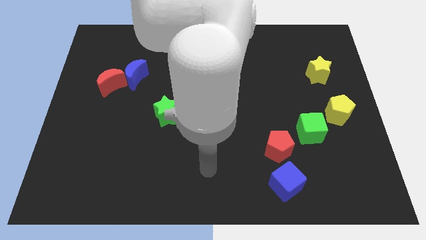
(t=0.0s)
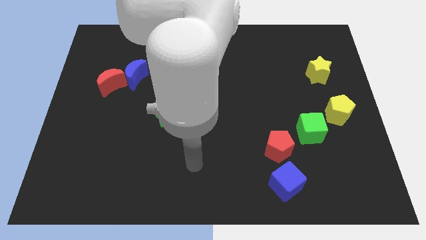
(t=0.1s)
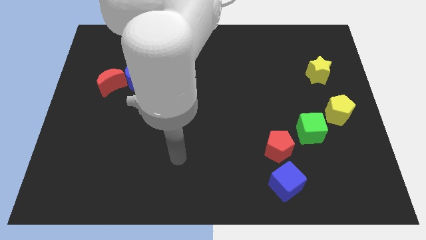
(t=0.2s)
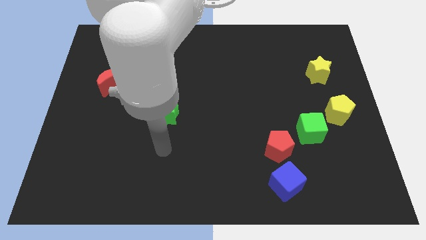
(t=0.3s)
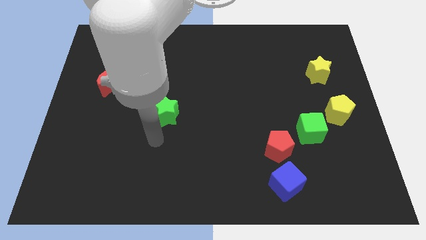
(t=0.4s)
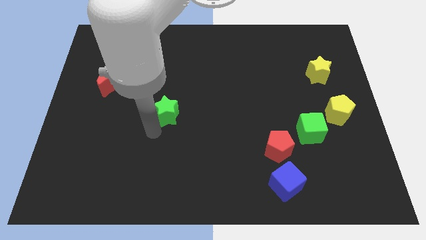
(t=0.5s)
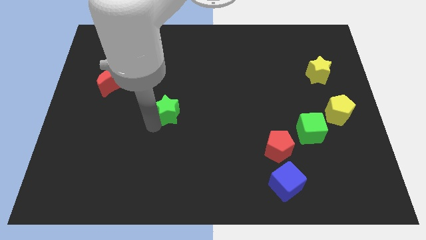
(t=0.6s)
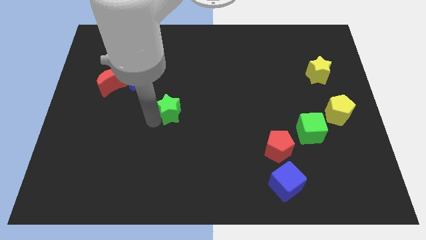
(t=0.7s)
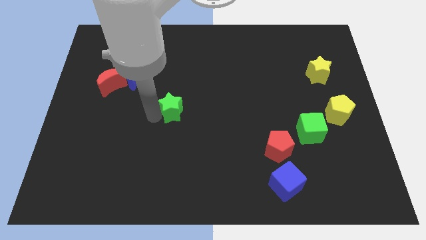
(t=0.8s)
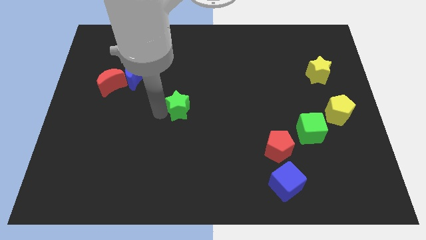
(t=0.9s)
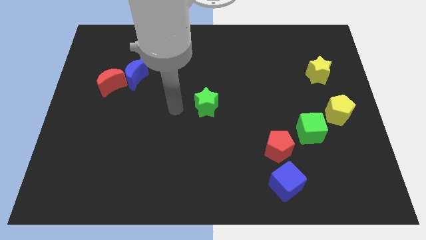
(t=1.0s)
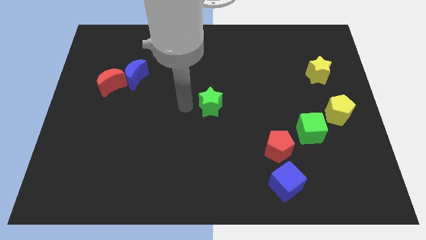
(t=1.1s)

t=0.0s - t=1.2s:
push green star slightly towards right side

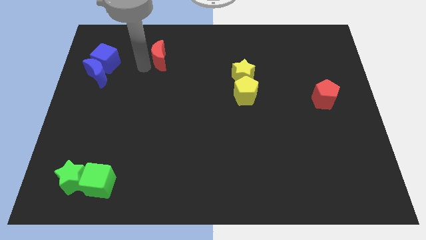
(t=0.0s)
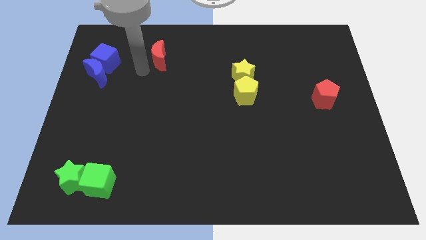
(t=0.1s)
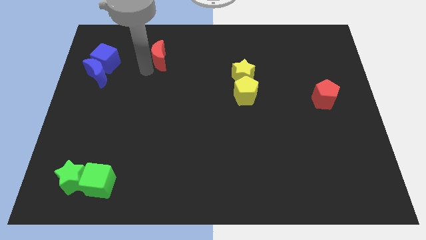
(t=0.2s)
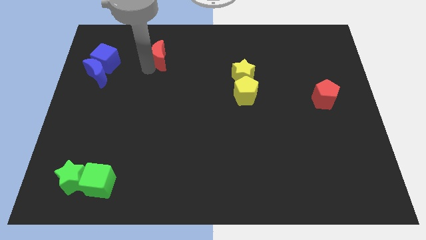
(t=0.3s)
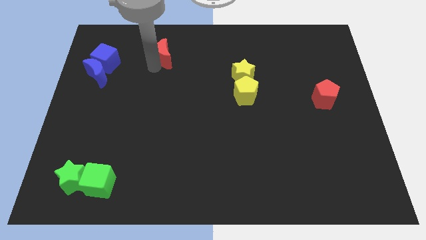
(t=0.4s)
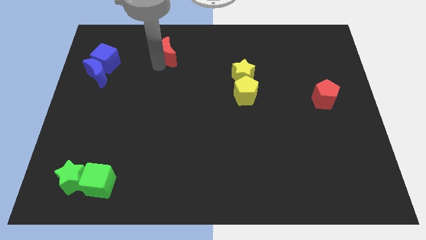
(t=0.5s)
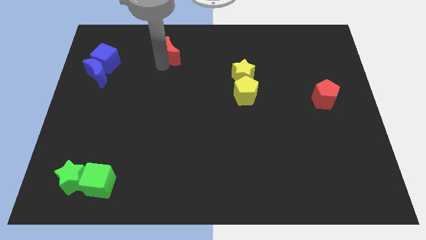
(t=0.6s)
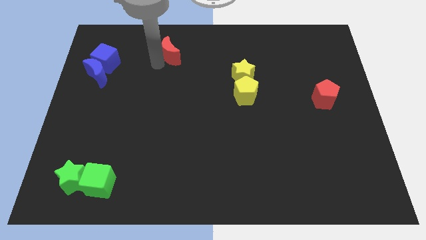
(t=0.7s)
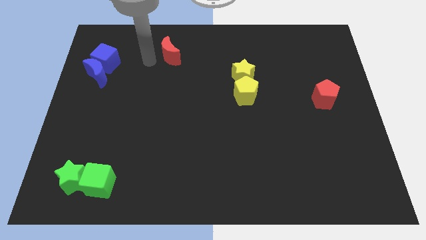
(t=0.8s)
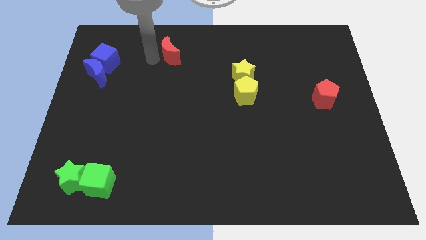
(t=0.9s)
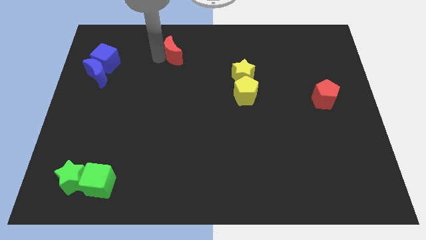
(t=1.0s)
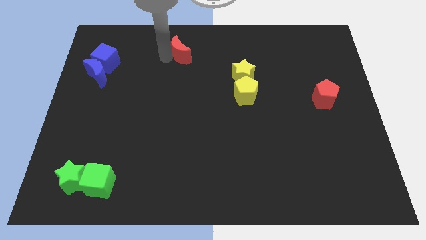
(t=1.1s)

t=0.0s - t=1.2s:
place the red moon to the top center

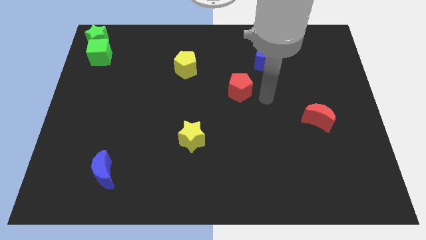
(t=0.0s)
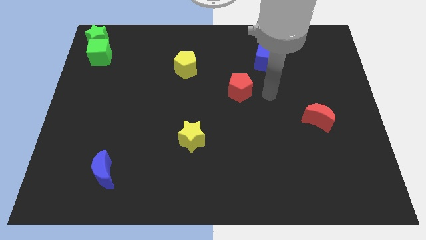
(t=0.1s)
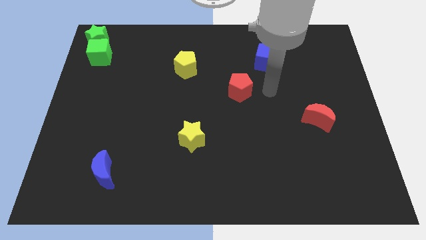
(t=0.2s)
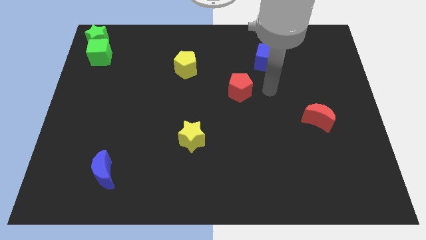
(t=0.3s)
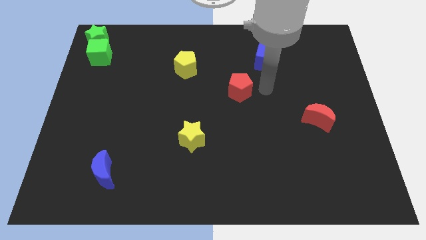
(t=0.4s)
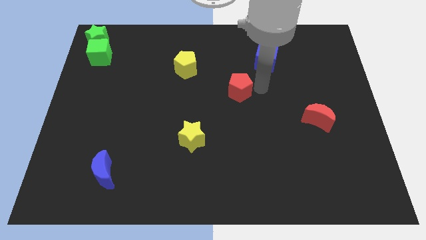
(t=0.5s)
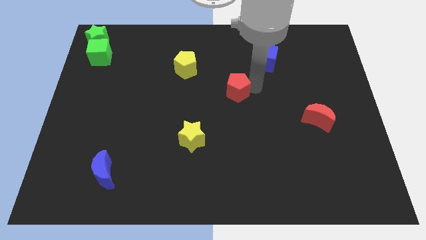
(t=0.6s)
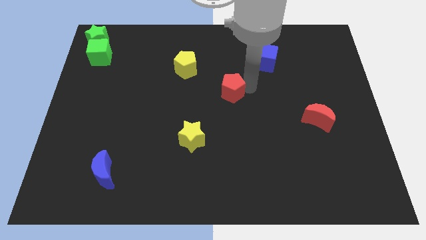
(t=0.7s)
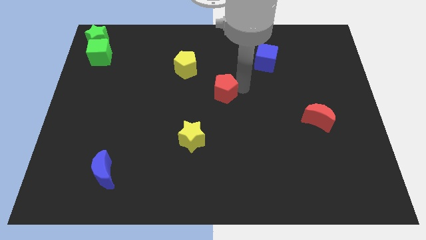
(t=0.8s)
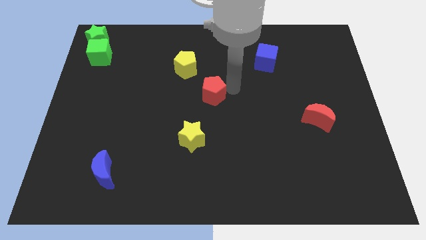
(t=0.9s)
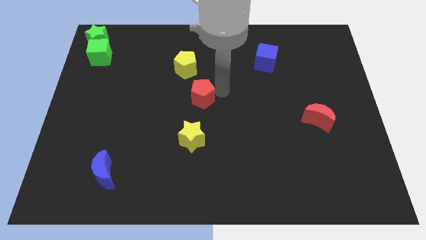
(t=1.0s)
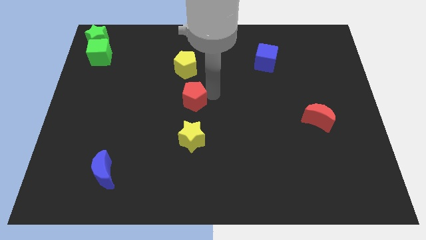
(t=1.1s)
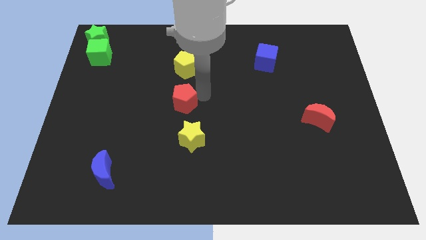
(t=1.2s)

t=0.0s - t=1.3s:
push the red pentagon in between the yellow star and yellow pentagon

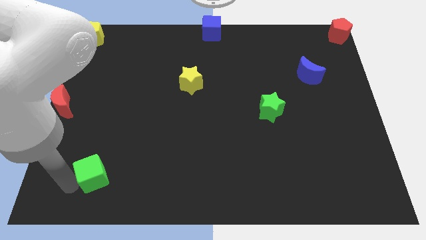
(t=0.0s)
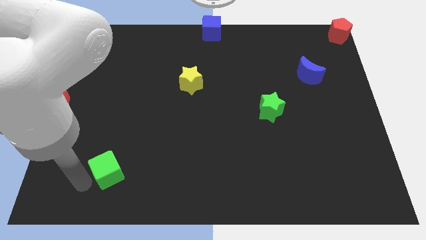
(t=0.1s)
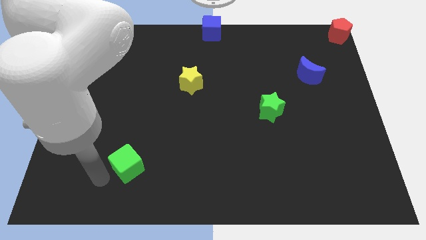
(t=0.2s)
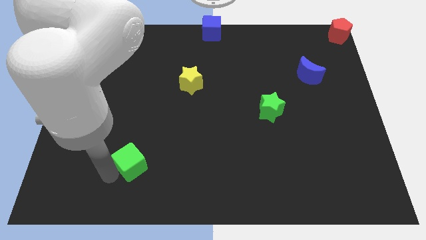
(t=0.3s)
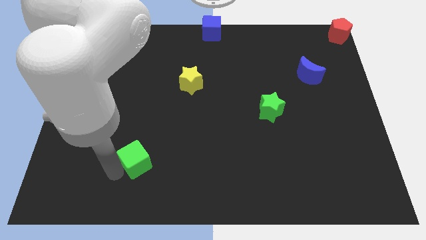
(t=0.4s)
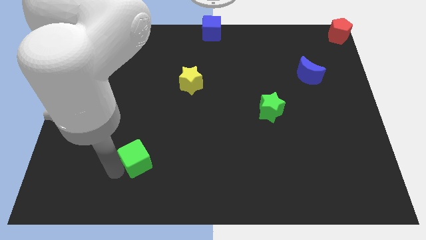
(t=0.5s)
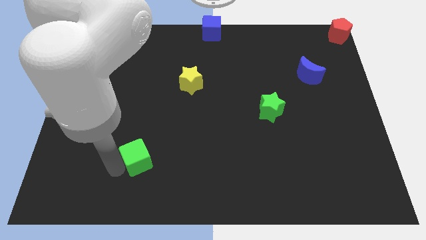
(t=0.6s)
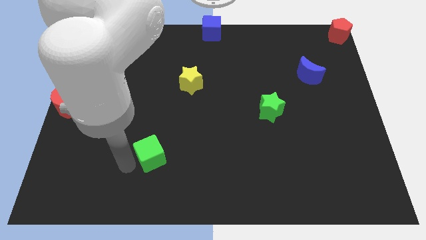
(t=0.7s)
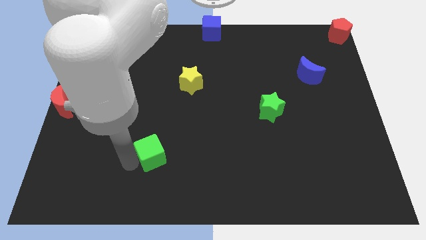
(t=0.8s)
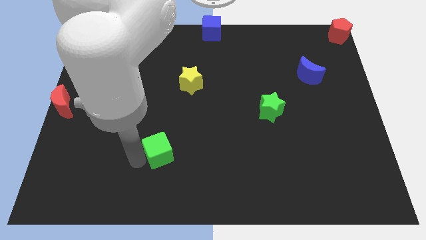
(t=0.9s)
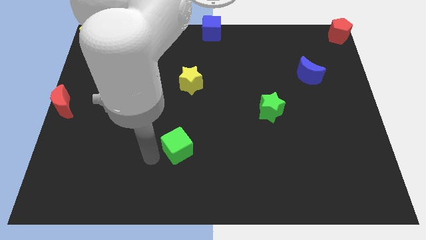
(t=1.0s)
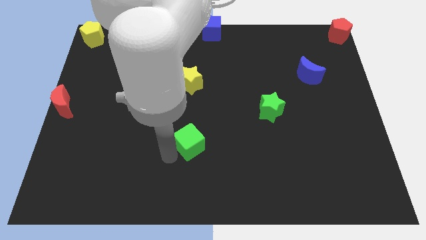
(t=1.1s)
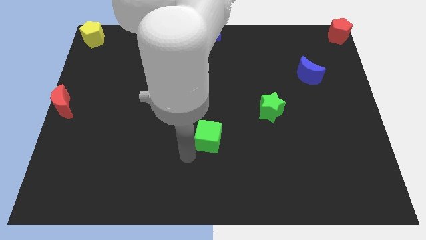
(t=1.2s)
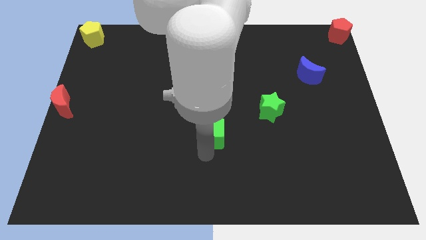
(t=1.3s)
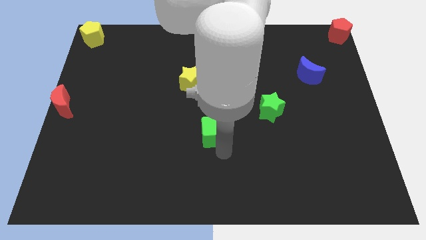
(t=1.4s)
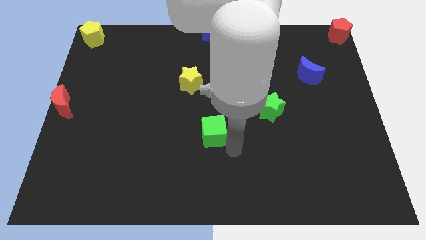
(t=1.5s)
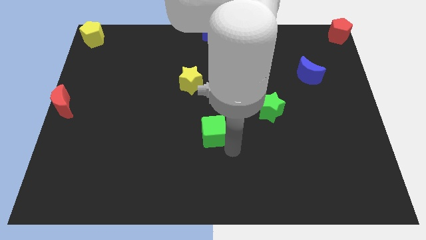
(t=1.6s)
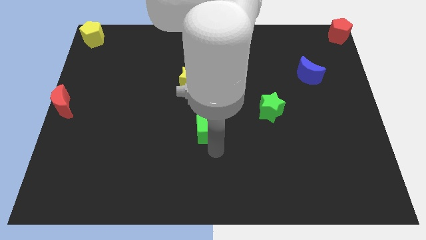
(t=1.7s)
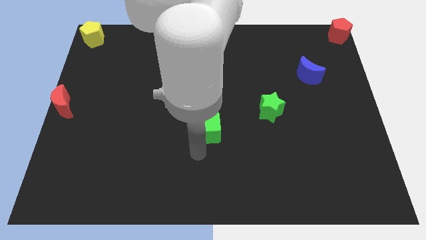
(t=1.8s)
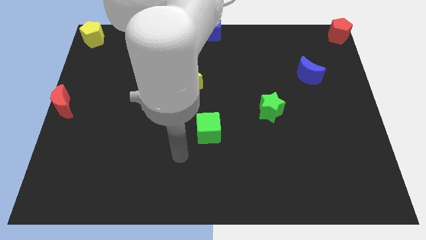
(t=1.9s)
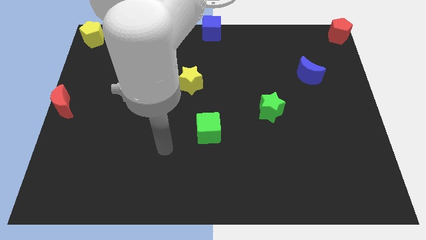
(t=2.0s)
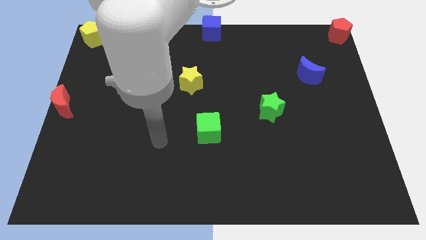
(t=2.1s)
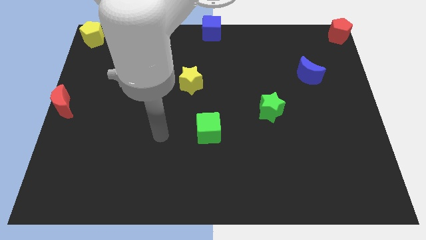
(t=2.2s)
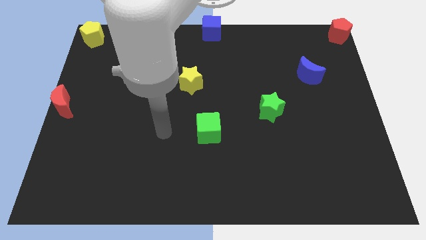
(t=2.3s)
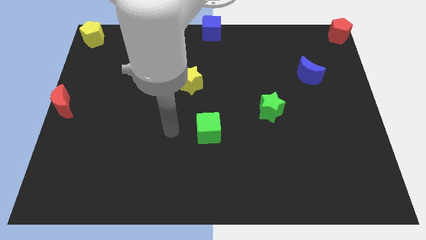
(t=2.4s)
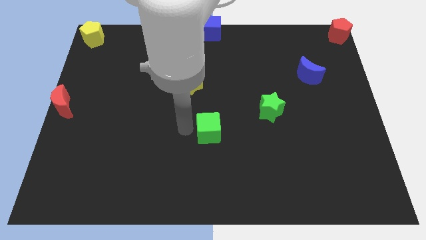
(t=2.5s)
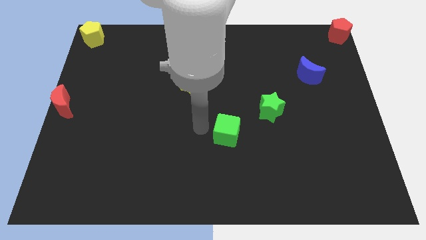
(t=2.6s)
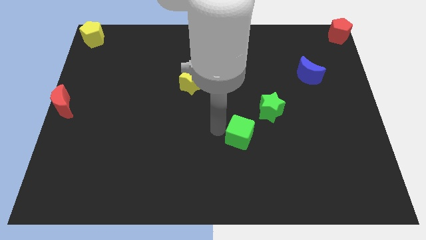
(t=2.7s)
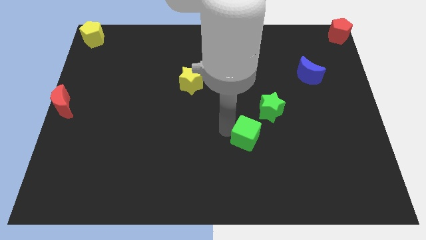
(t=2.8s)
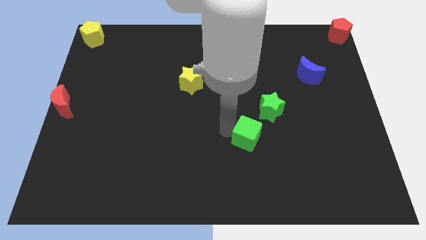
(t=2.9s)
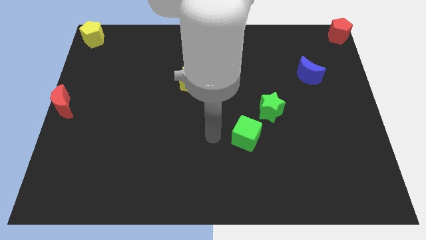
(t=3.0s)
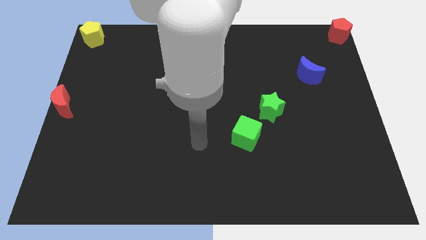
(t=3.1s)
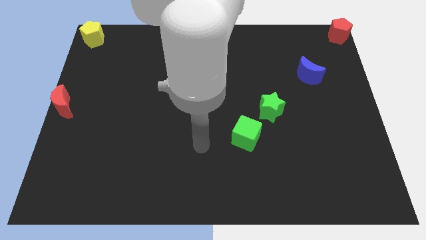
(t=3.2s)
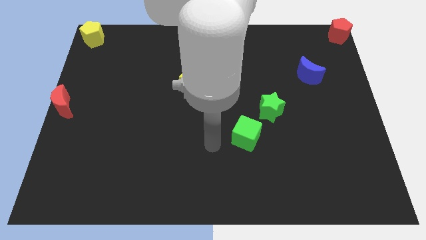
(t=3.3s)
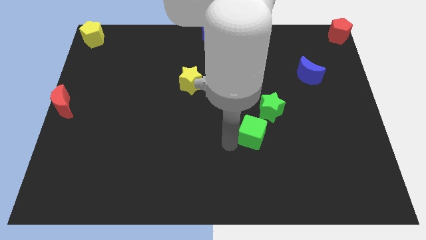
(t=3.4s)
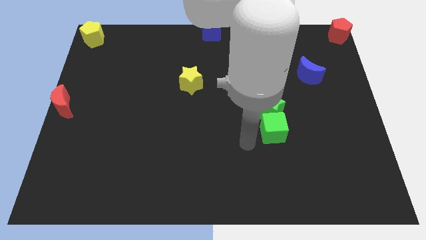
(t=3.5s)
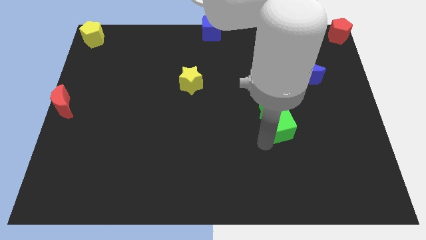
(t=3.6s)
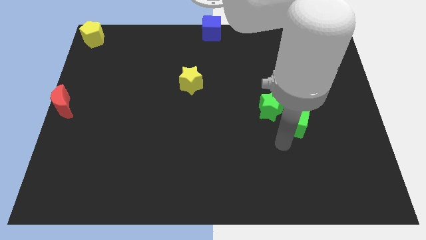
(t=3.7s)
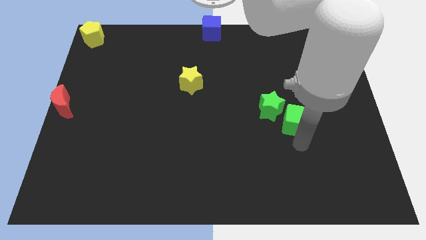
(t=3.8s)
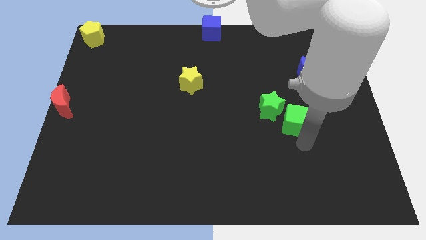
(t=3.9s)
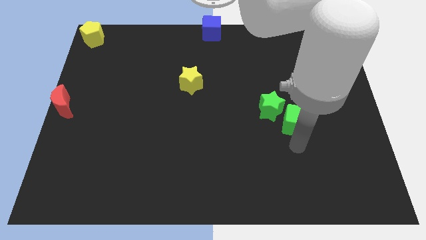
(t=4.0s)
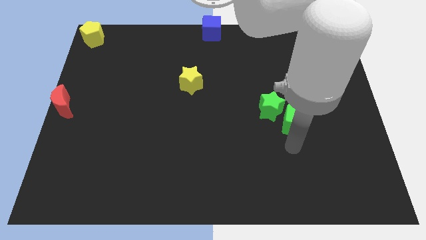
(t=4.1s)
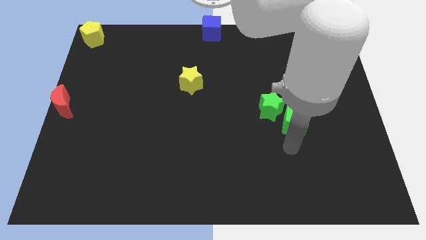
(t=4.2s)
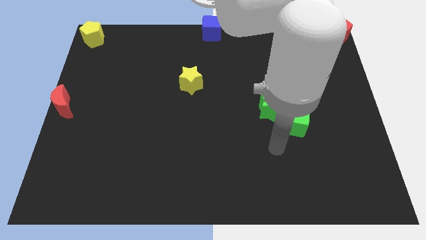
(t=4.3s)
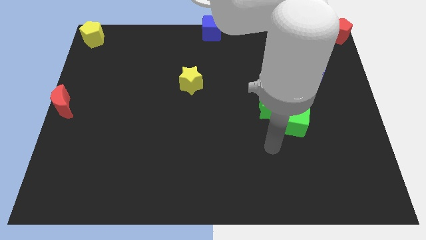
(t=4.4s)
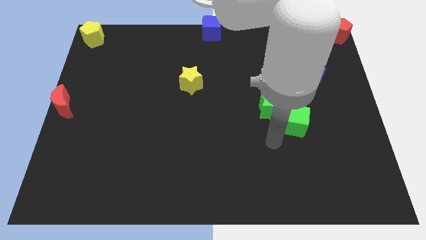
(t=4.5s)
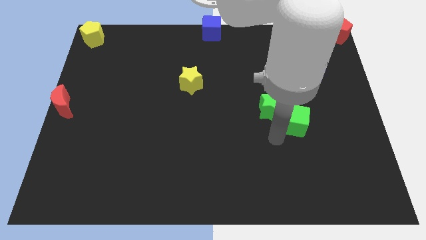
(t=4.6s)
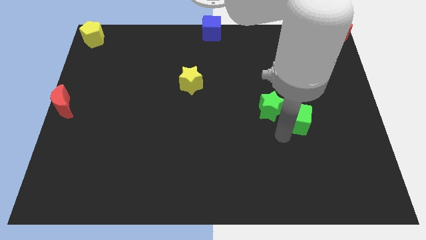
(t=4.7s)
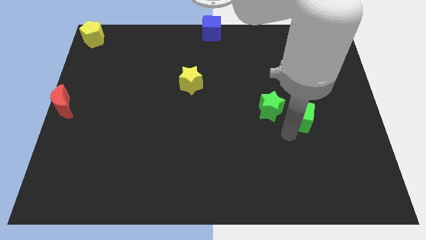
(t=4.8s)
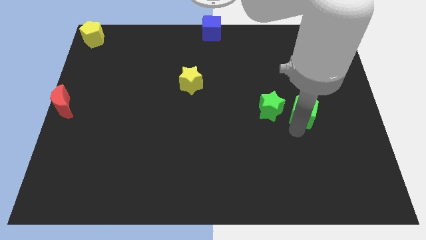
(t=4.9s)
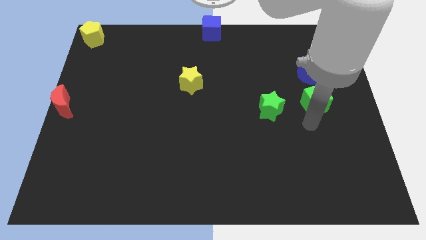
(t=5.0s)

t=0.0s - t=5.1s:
move the green cube to the bottom of the blue crescent
